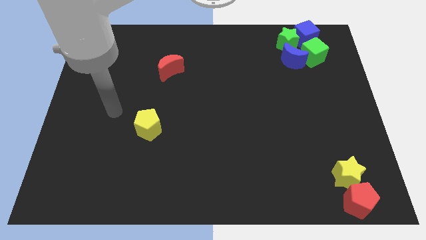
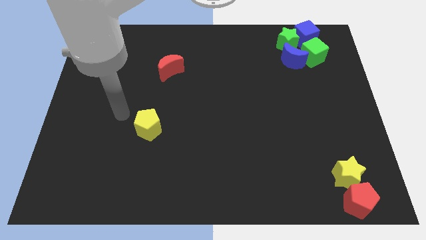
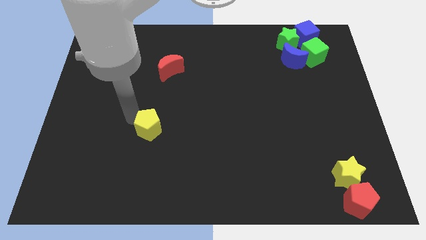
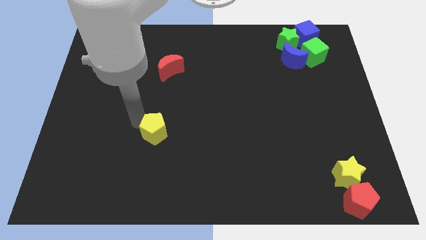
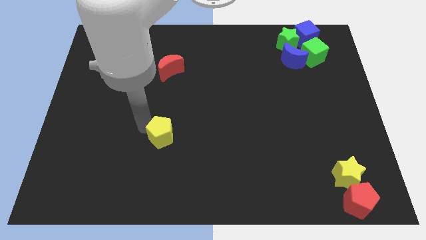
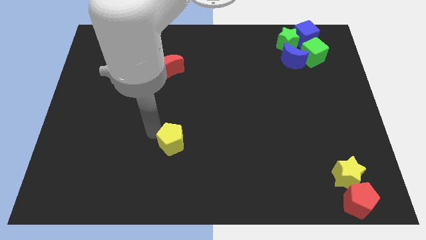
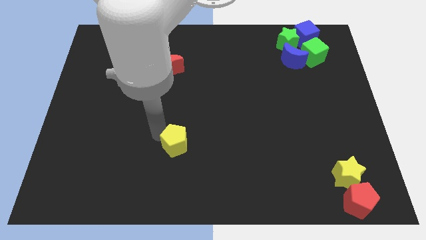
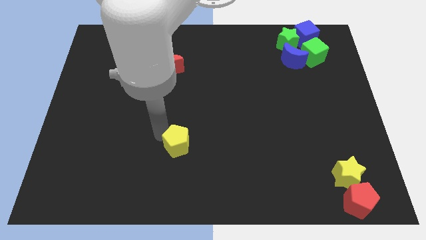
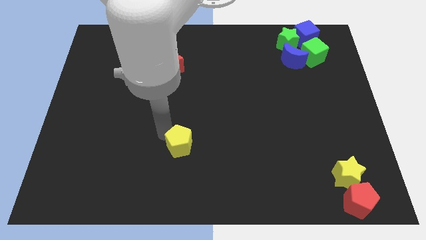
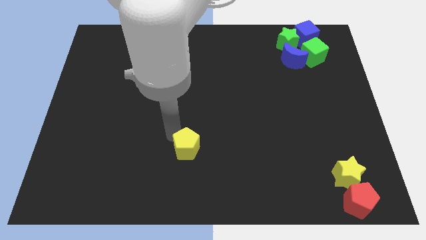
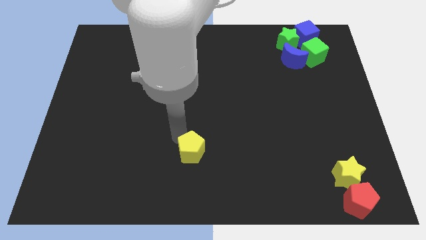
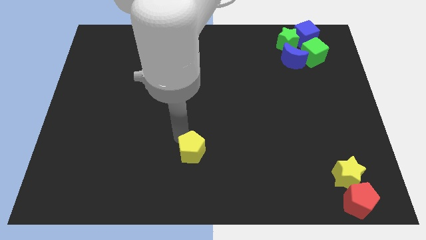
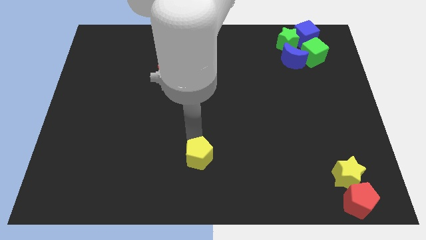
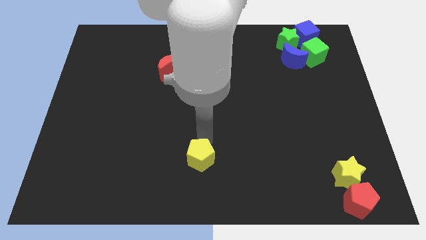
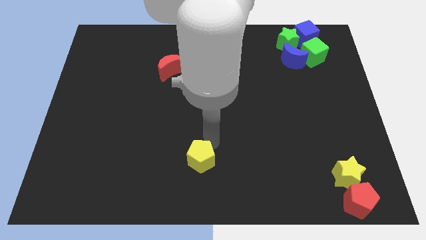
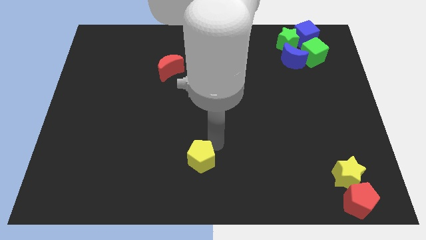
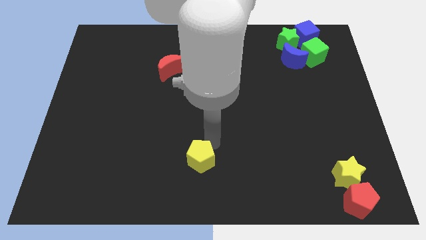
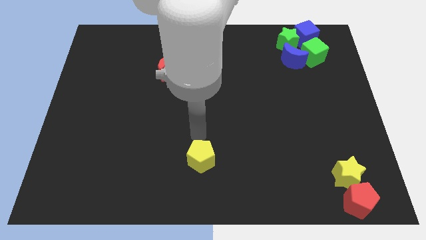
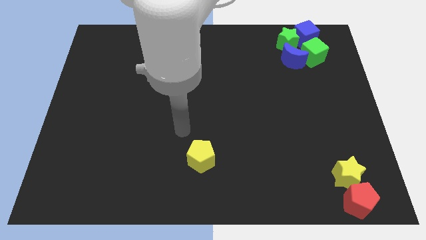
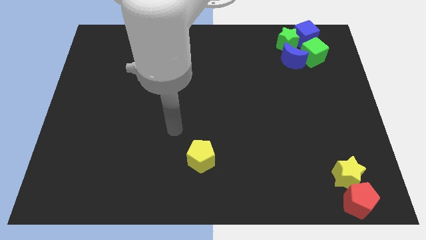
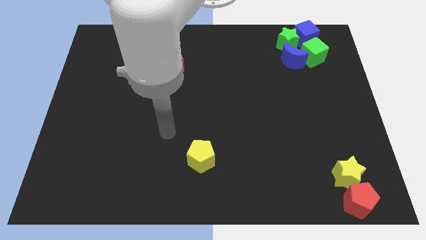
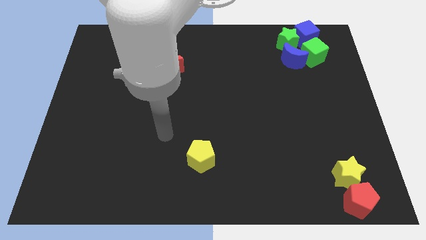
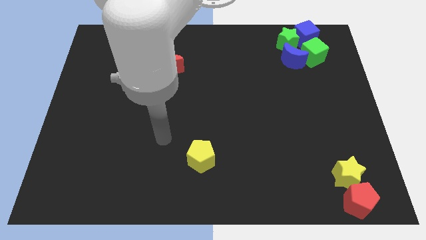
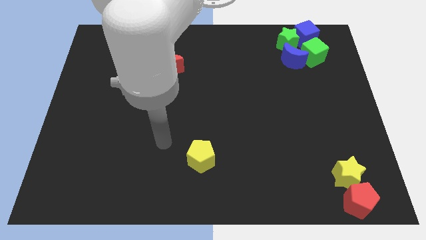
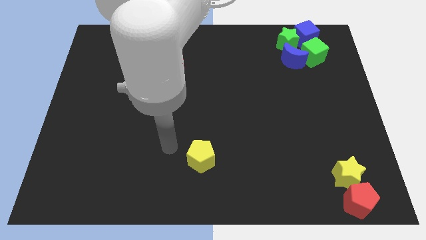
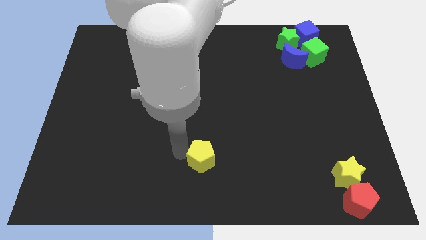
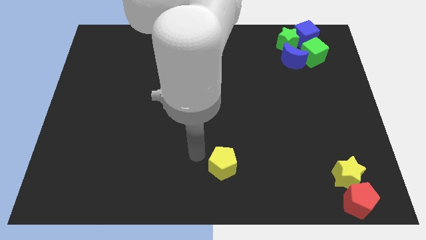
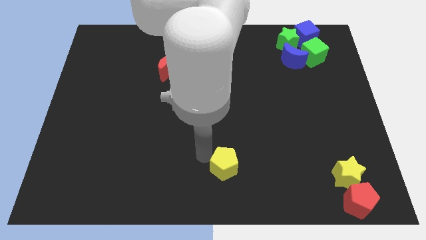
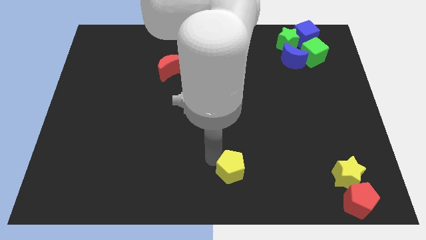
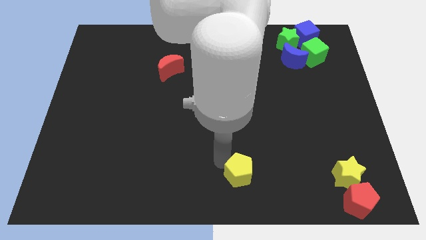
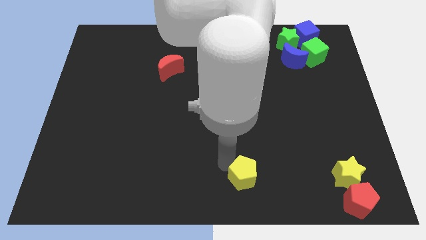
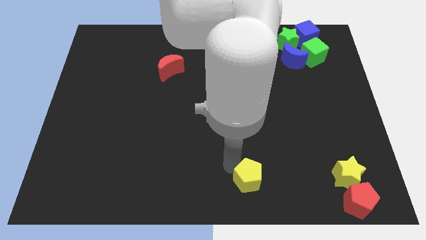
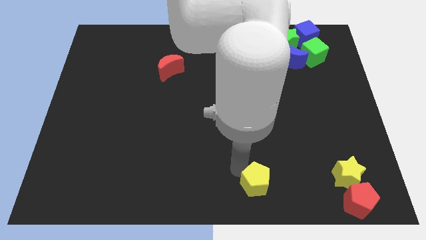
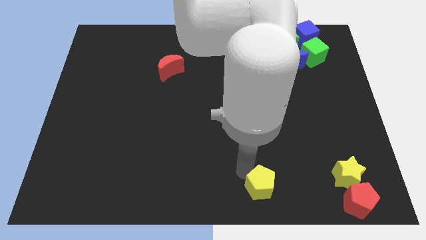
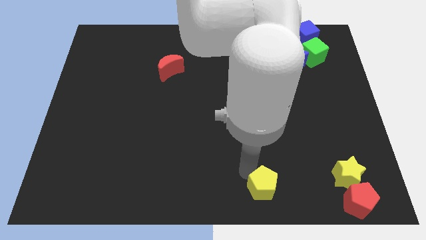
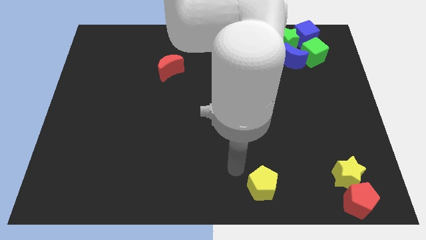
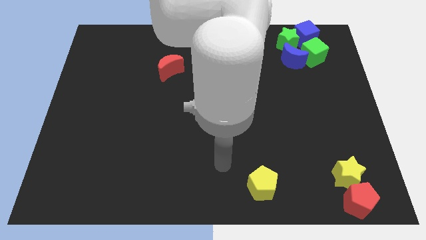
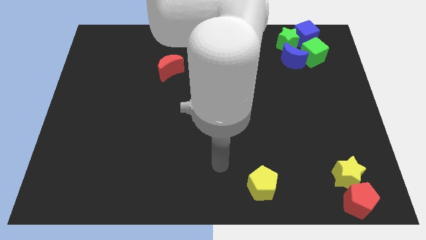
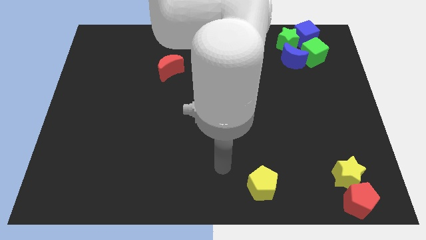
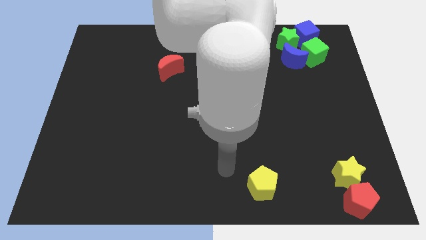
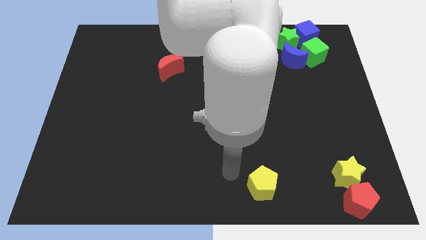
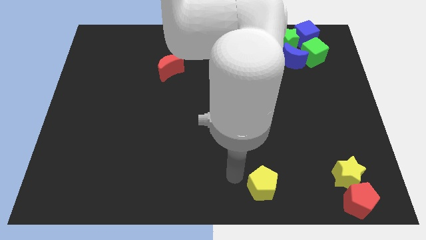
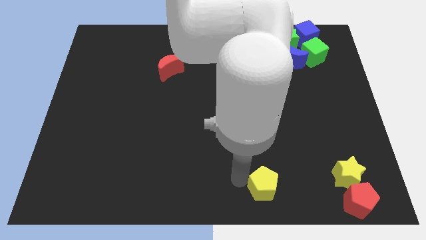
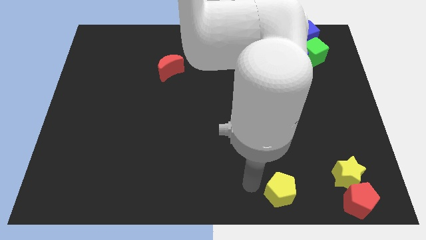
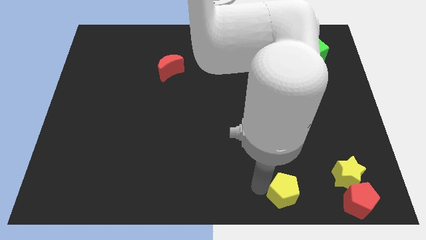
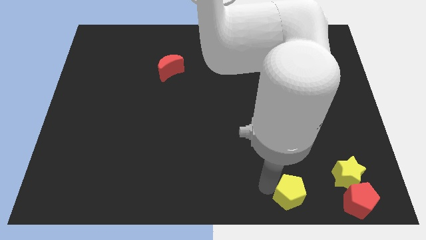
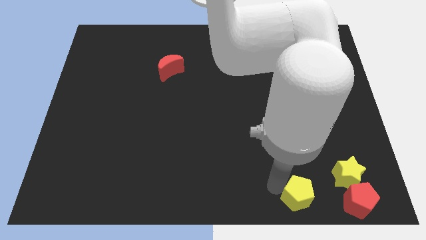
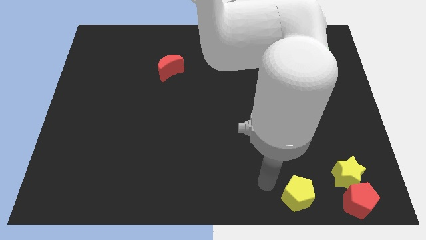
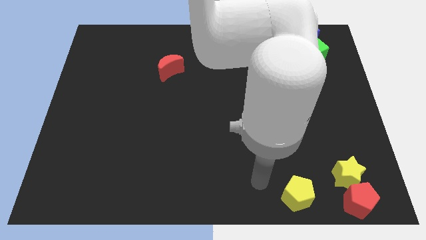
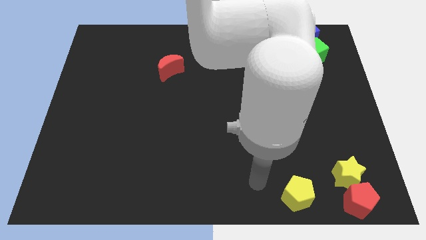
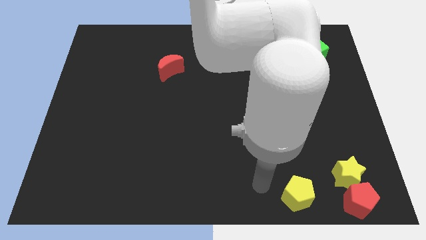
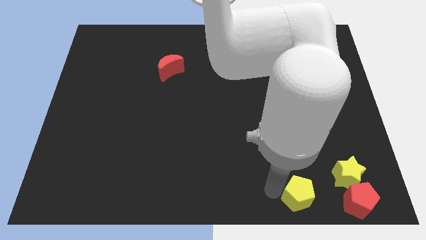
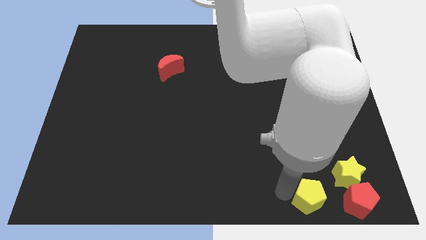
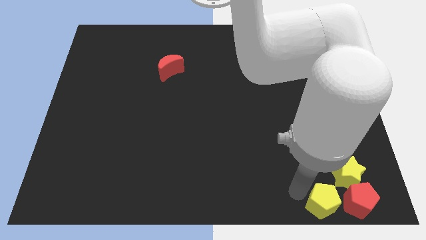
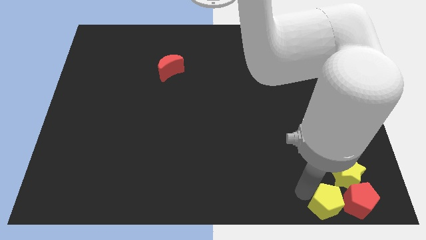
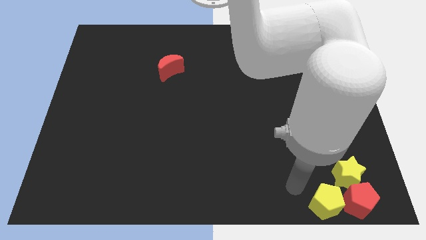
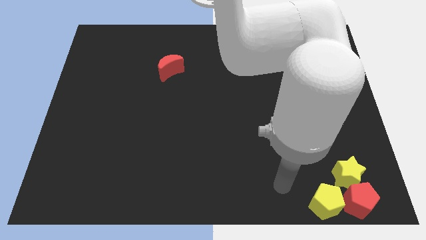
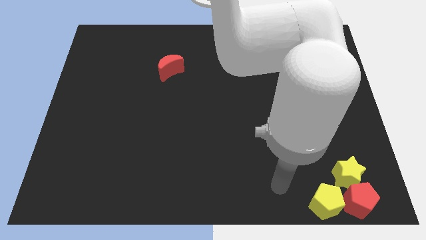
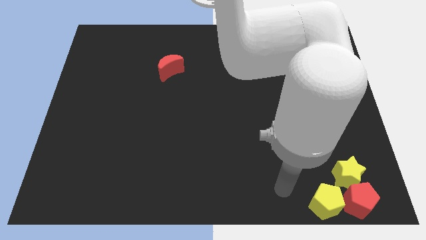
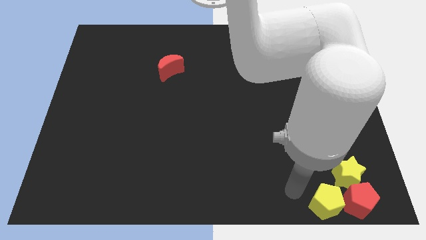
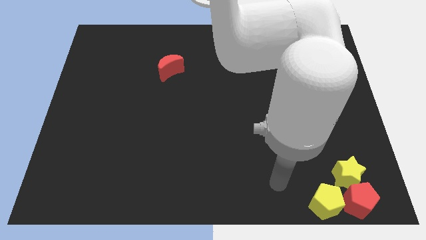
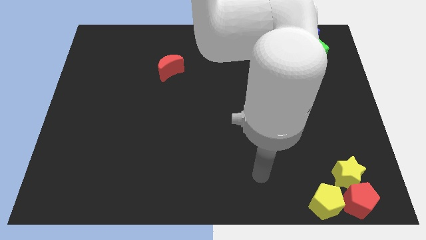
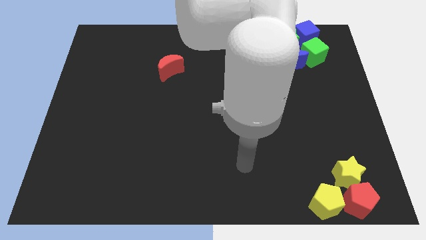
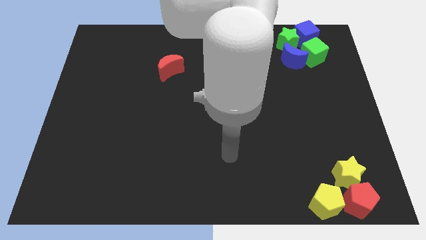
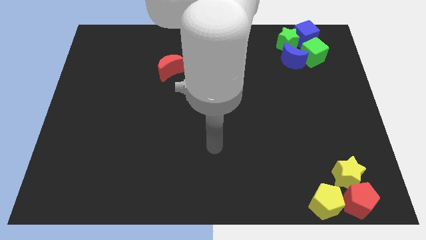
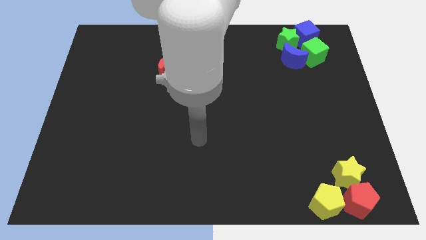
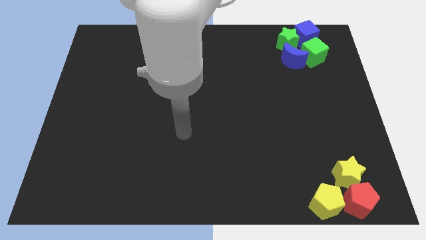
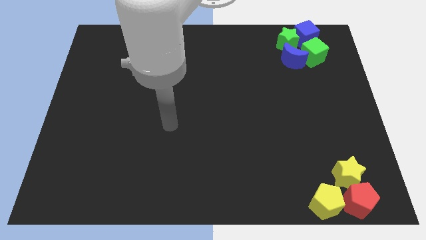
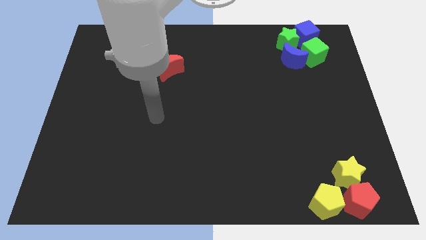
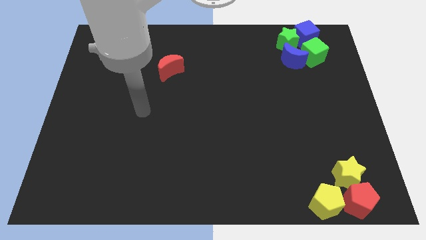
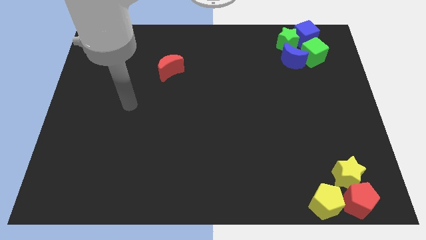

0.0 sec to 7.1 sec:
place the yellow pentagon to the left of the red pentagon

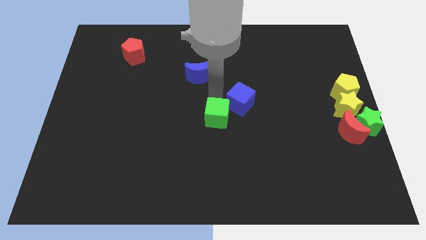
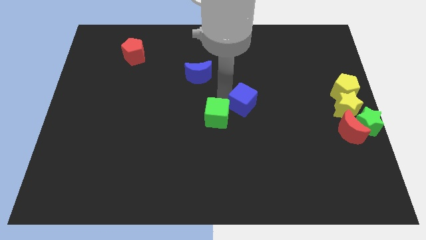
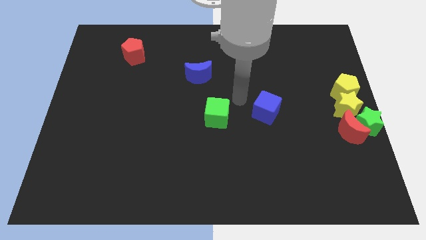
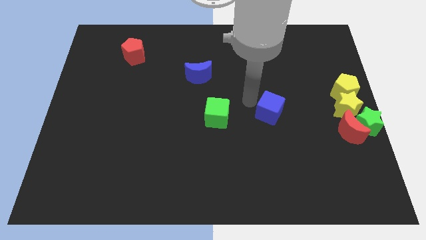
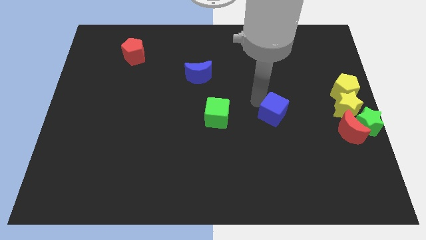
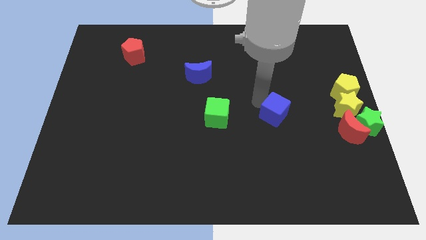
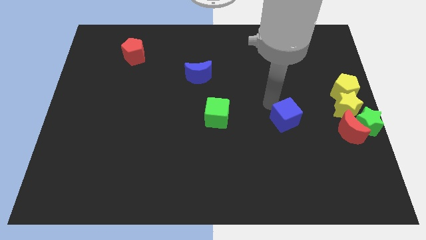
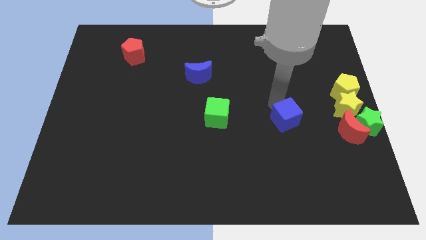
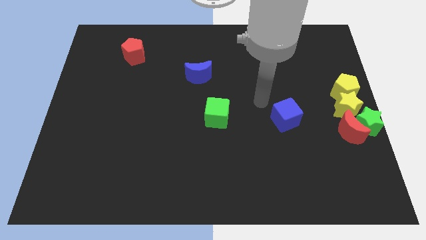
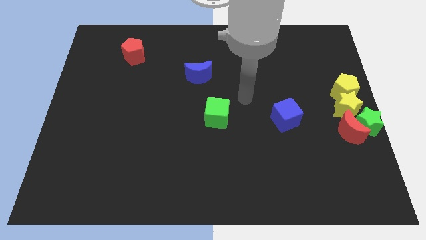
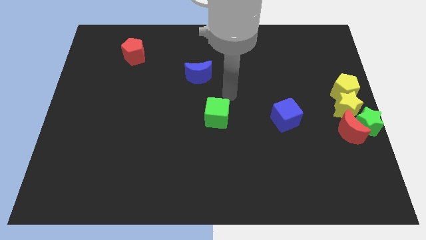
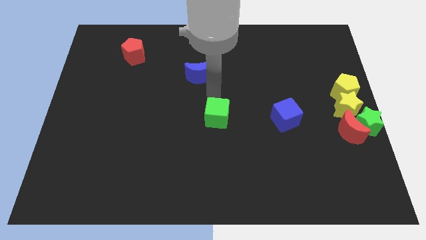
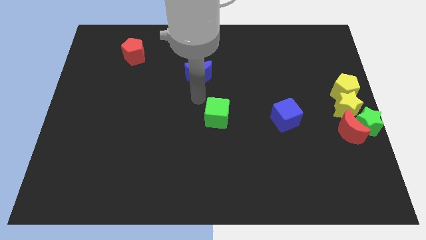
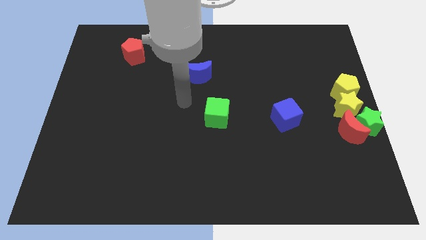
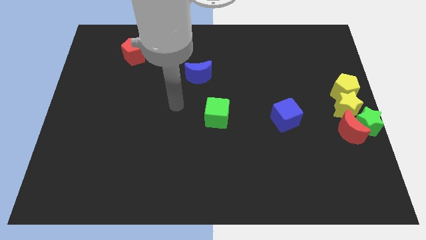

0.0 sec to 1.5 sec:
move the blue cube to the left of the yellow star

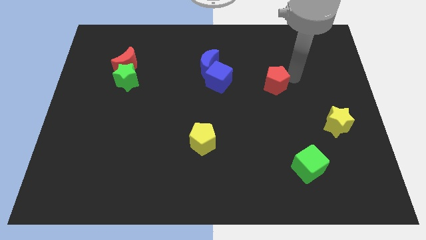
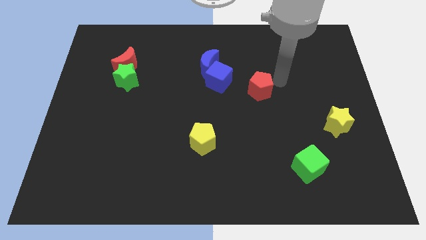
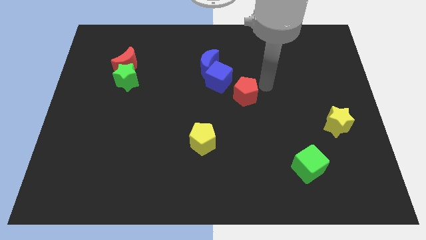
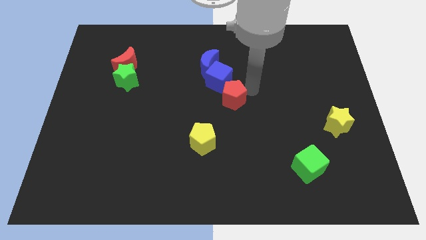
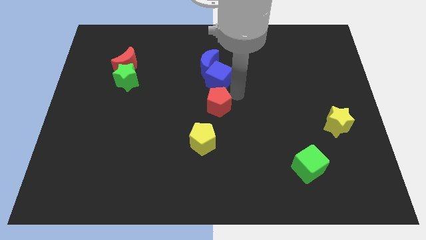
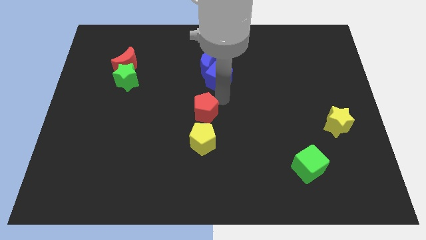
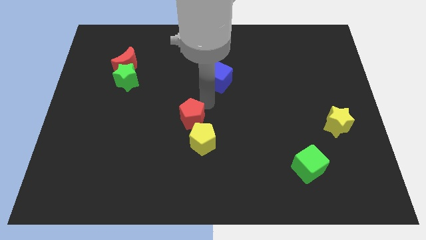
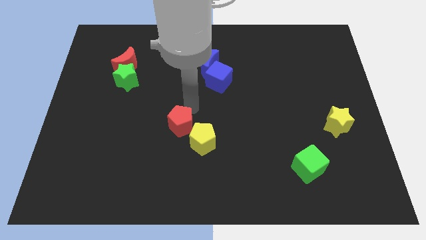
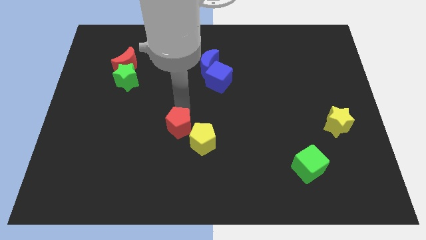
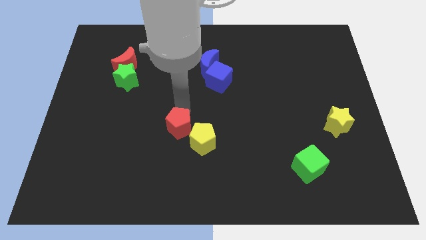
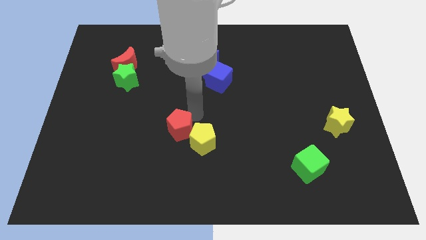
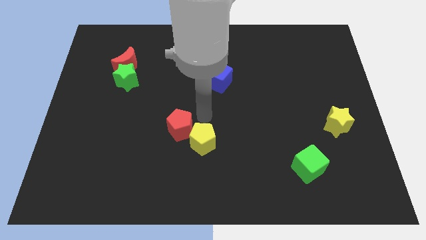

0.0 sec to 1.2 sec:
push the red pentagon towards the top left to the yellow pentagon
